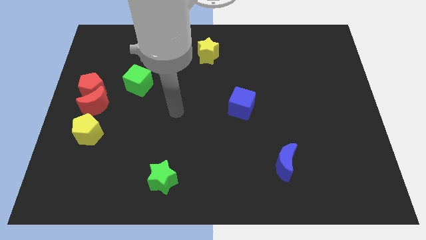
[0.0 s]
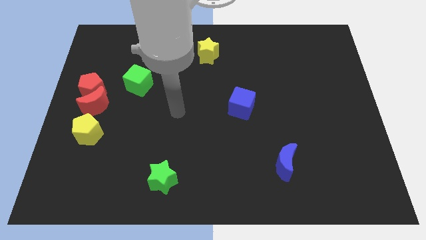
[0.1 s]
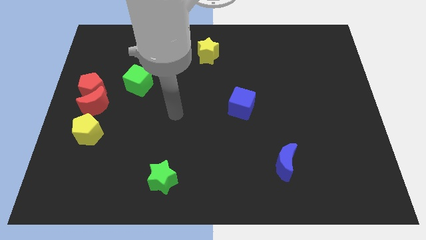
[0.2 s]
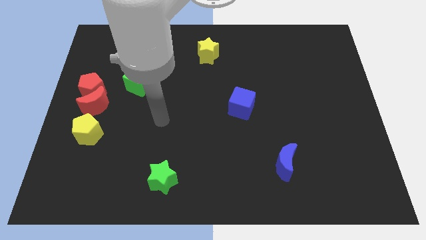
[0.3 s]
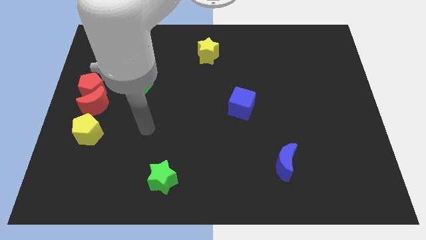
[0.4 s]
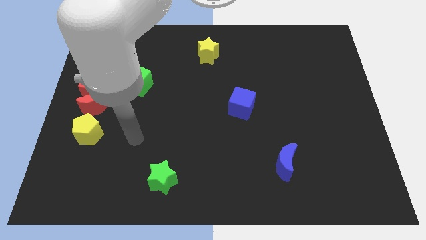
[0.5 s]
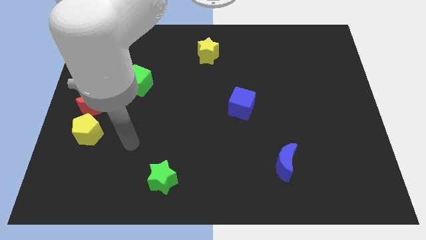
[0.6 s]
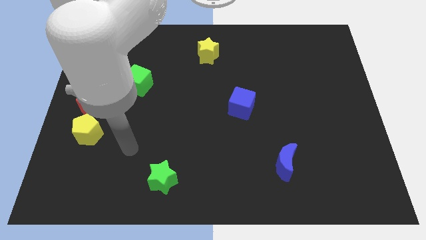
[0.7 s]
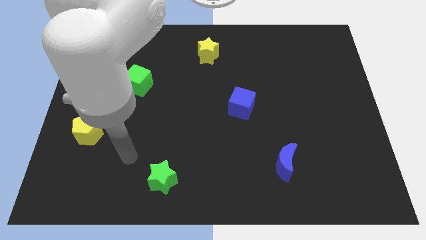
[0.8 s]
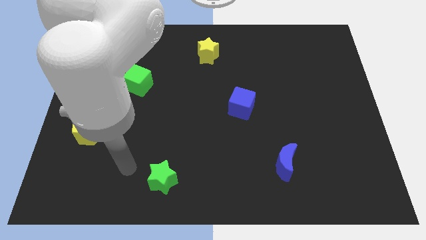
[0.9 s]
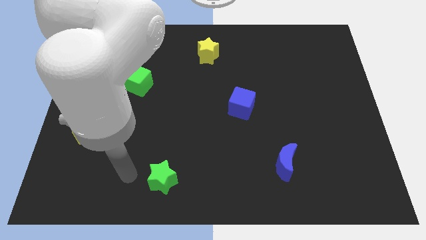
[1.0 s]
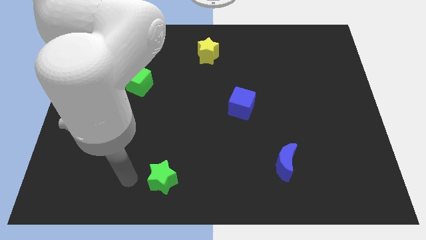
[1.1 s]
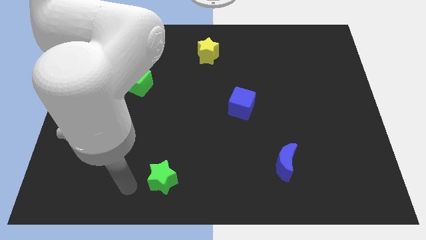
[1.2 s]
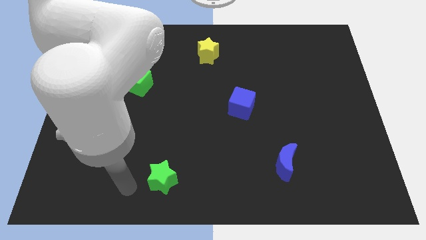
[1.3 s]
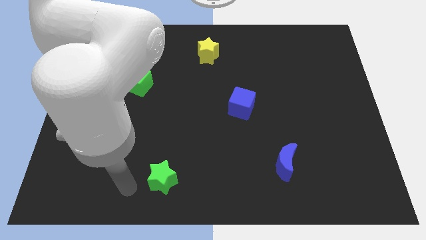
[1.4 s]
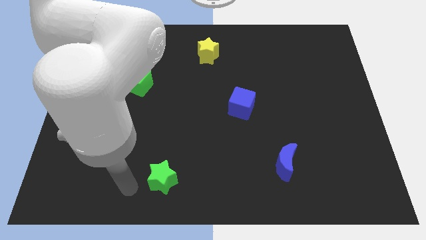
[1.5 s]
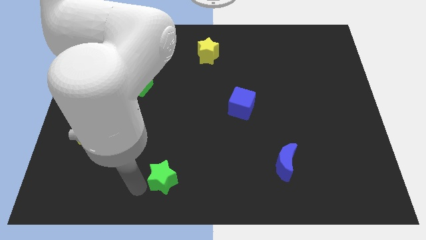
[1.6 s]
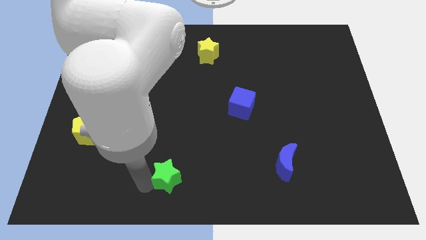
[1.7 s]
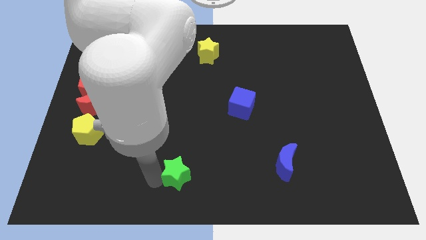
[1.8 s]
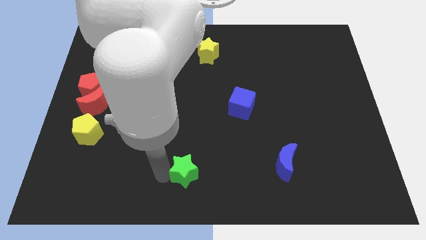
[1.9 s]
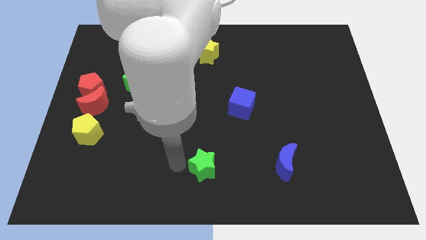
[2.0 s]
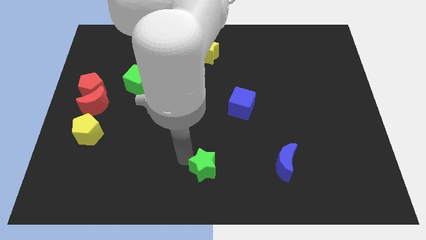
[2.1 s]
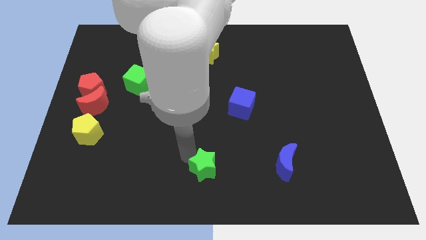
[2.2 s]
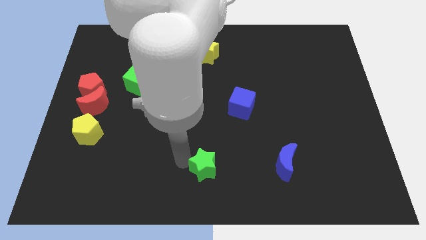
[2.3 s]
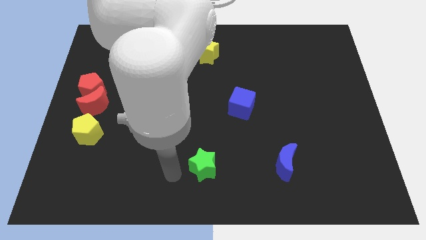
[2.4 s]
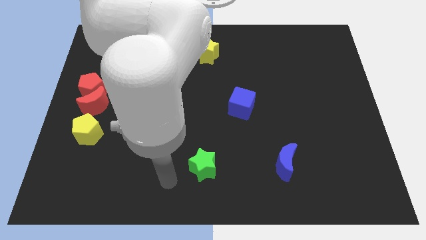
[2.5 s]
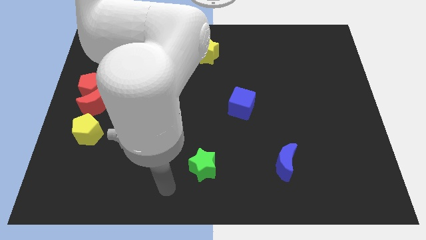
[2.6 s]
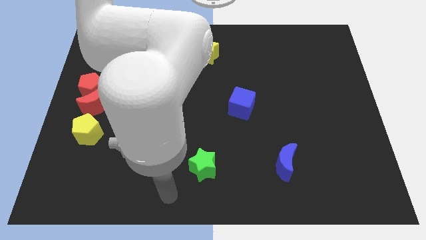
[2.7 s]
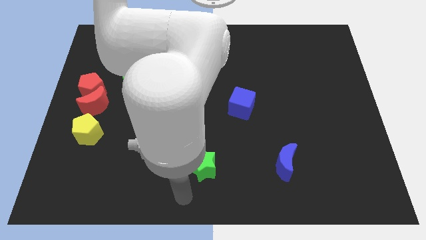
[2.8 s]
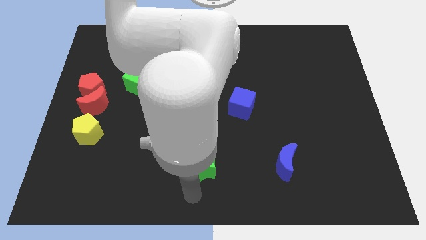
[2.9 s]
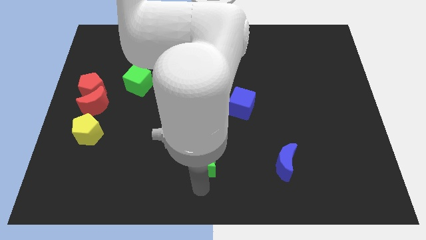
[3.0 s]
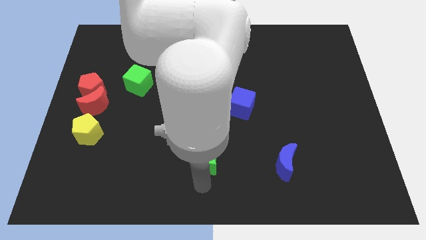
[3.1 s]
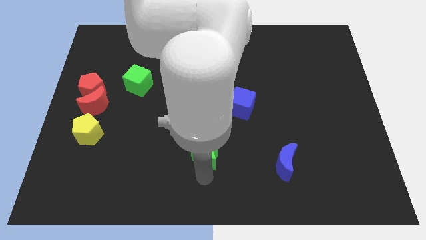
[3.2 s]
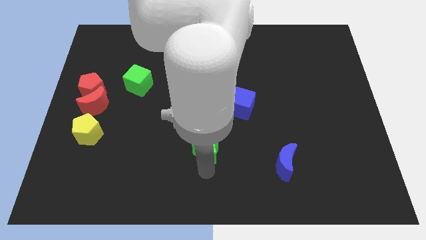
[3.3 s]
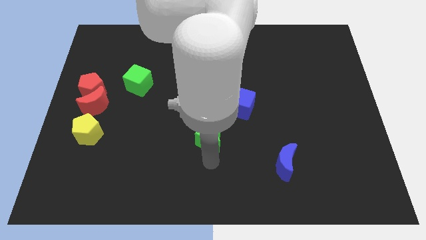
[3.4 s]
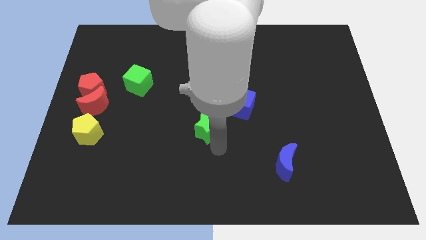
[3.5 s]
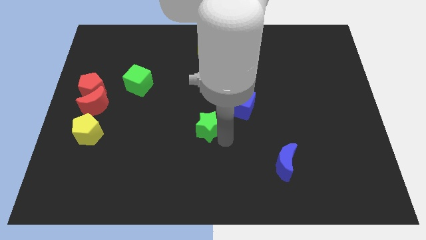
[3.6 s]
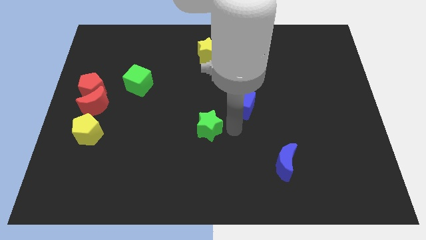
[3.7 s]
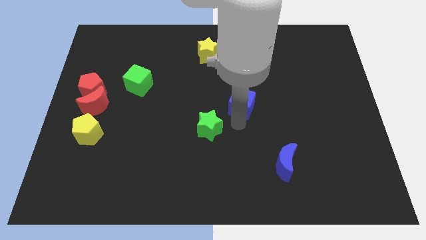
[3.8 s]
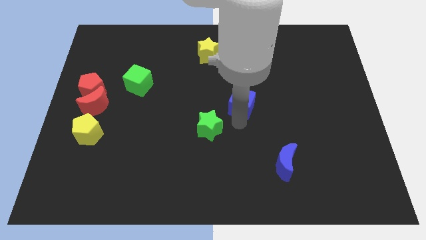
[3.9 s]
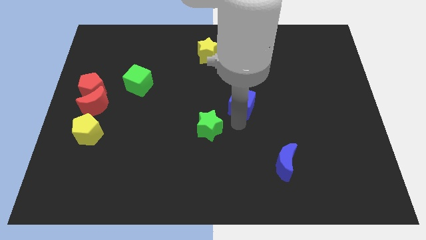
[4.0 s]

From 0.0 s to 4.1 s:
place the green star at the center of the board

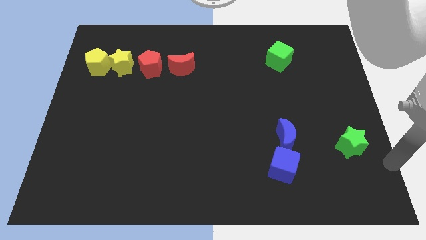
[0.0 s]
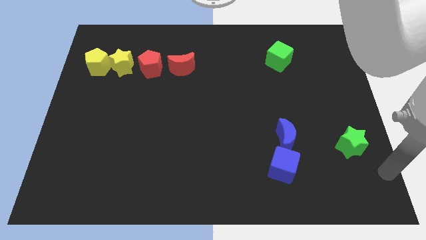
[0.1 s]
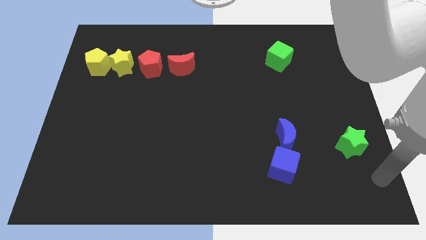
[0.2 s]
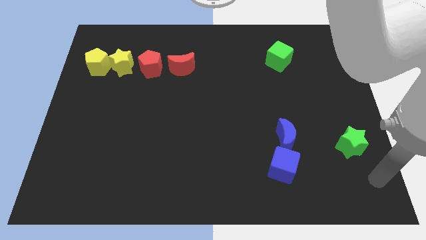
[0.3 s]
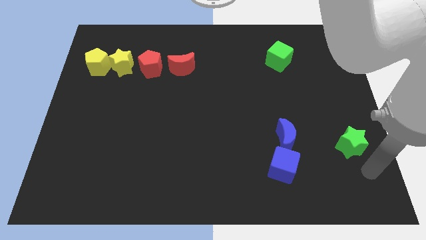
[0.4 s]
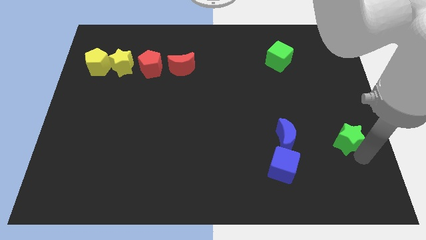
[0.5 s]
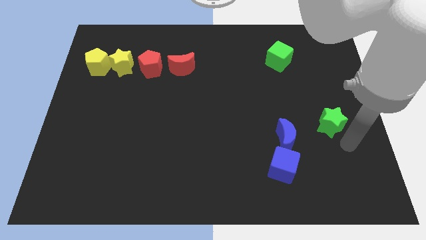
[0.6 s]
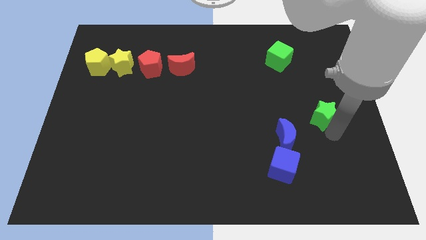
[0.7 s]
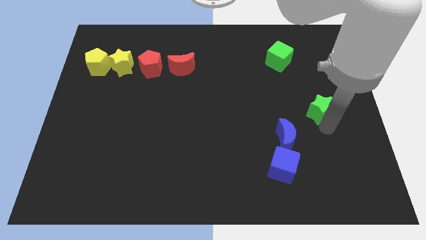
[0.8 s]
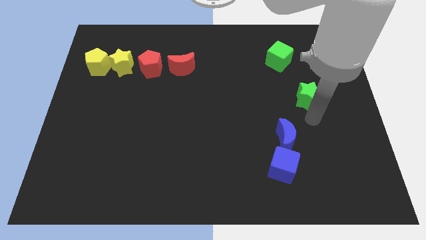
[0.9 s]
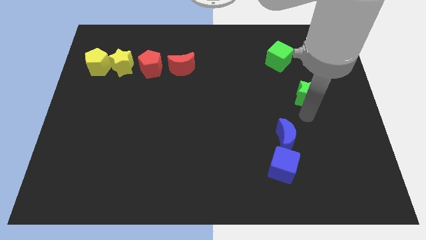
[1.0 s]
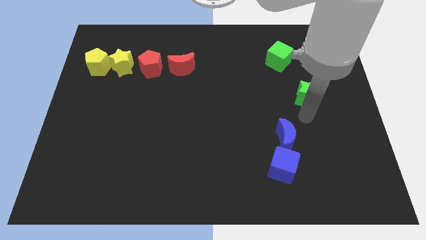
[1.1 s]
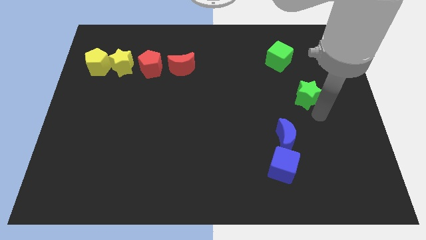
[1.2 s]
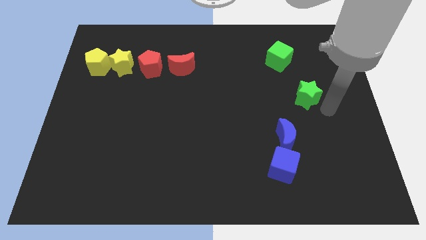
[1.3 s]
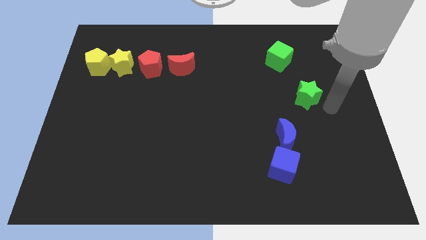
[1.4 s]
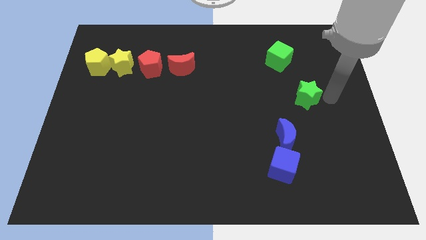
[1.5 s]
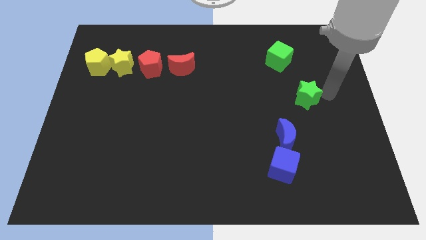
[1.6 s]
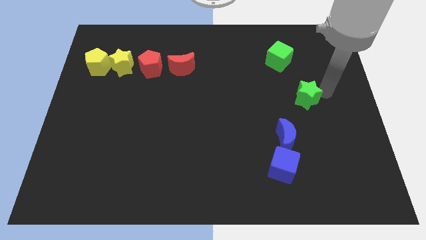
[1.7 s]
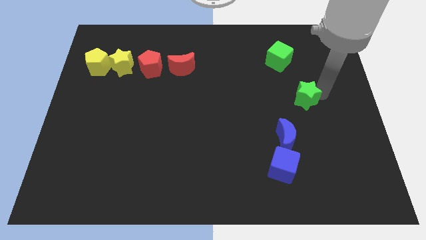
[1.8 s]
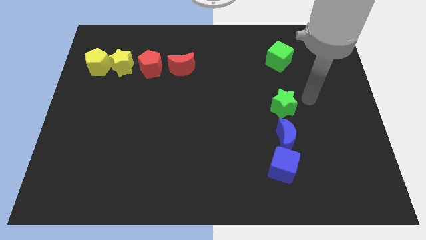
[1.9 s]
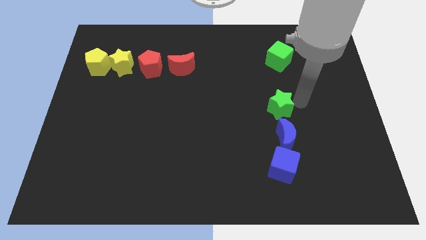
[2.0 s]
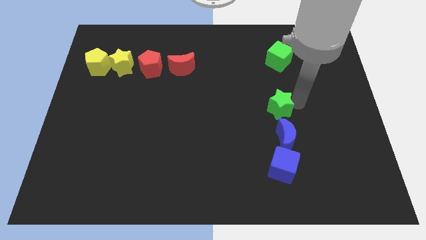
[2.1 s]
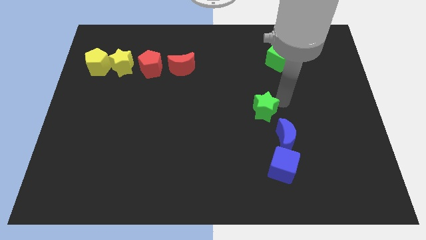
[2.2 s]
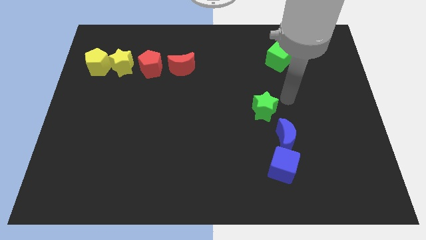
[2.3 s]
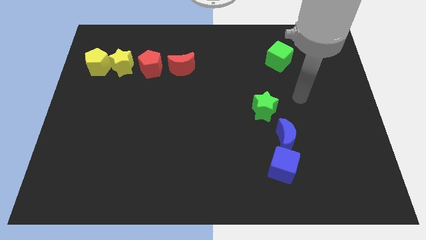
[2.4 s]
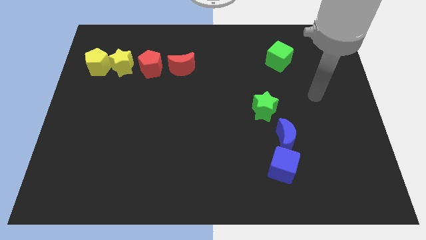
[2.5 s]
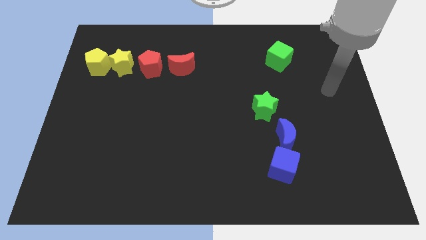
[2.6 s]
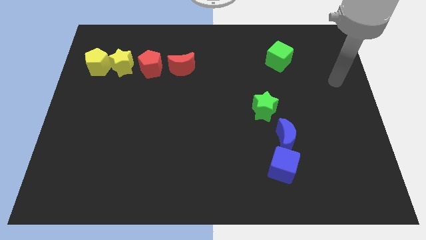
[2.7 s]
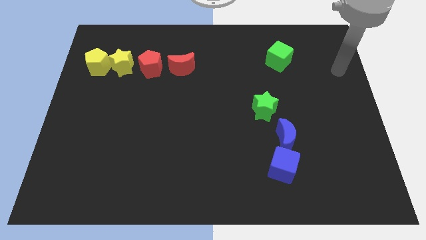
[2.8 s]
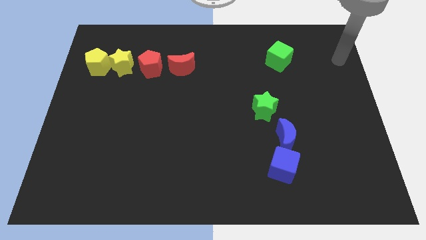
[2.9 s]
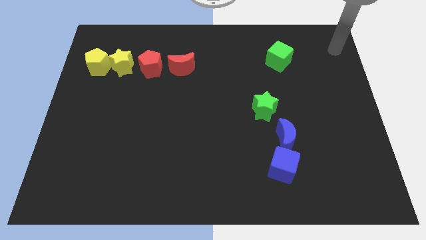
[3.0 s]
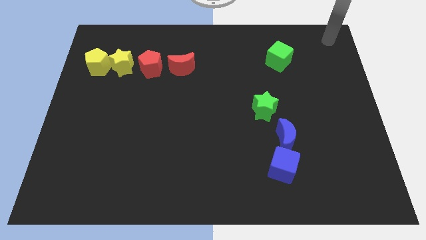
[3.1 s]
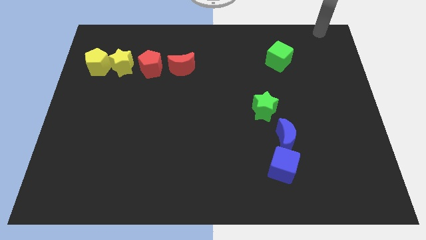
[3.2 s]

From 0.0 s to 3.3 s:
put the green star at the top left side of the blue crescent

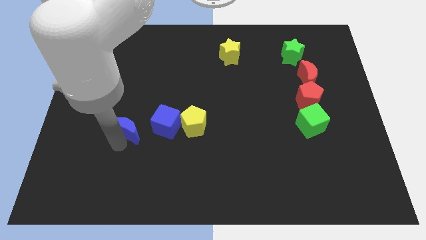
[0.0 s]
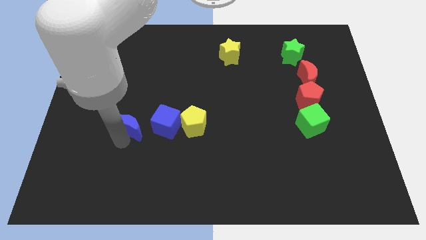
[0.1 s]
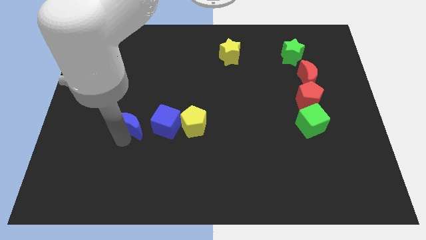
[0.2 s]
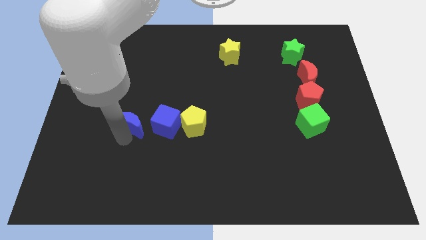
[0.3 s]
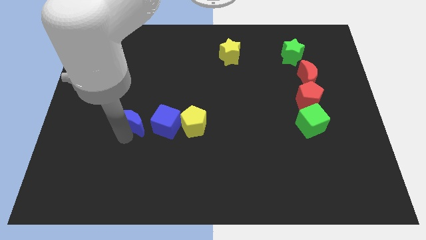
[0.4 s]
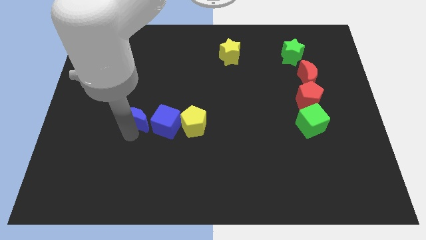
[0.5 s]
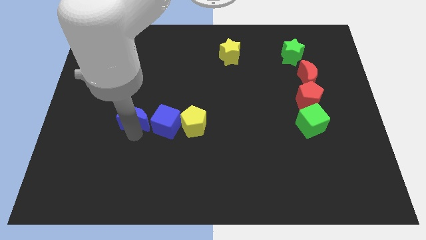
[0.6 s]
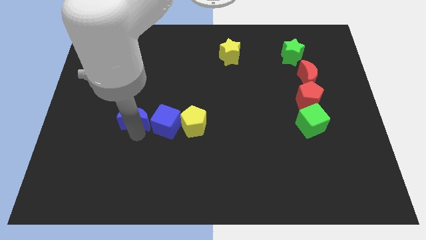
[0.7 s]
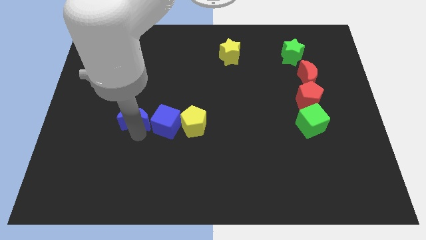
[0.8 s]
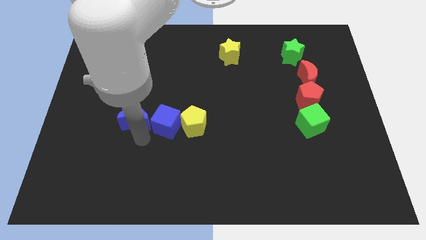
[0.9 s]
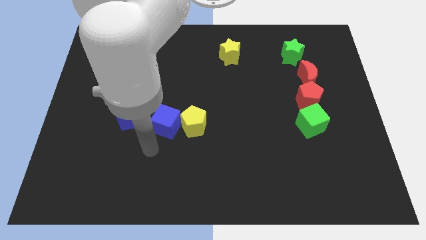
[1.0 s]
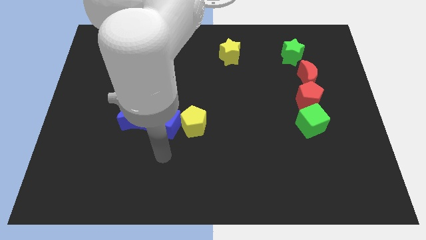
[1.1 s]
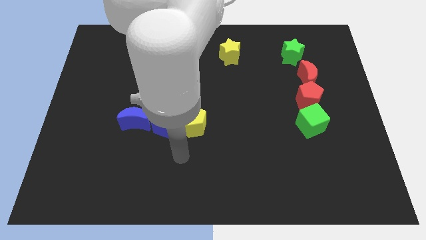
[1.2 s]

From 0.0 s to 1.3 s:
move the blue crescent left to the blue cube

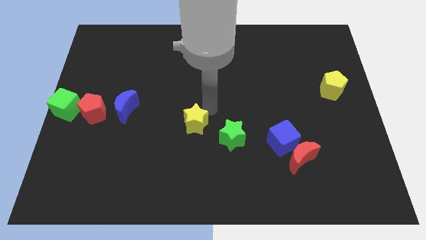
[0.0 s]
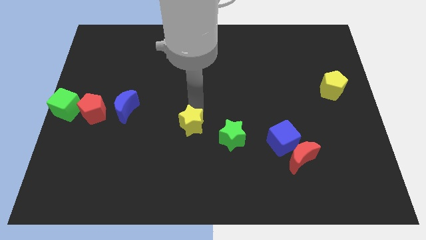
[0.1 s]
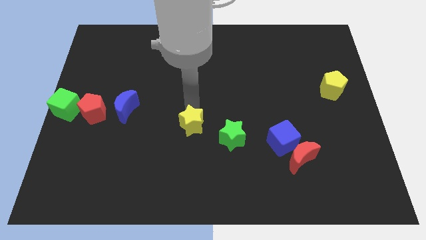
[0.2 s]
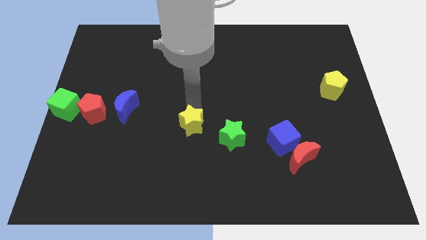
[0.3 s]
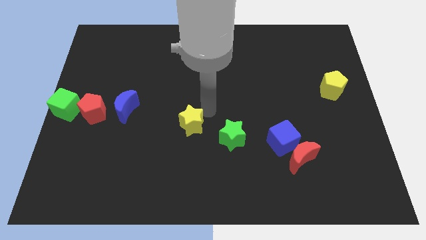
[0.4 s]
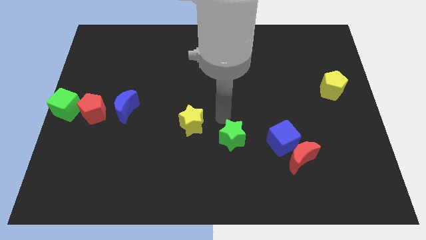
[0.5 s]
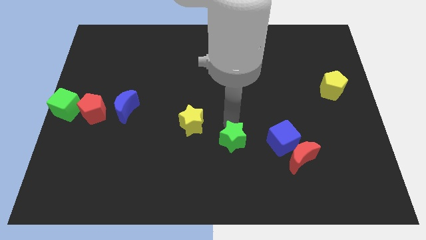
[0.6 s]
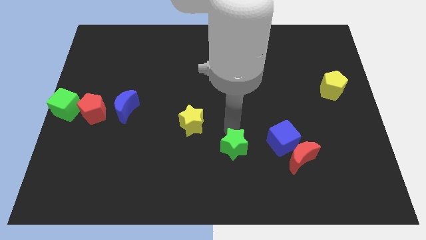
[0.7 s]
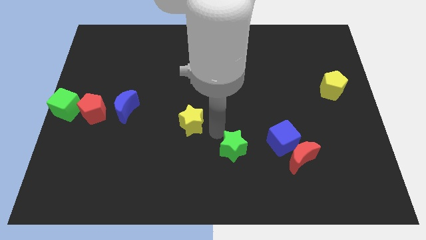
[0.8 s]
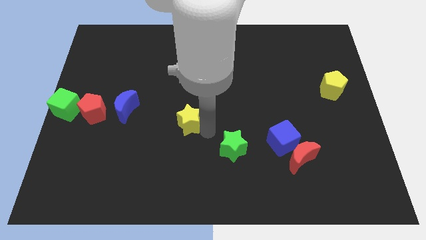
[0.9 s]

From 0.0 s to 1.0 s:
slightly touch the green star
